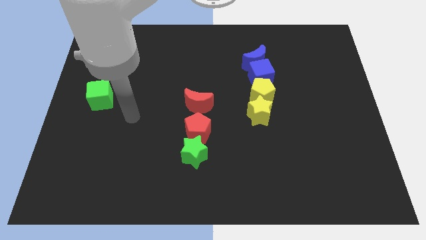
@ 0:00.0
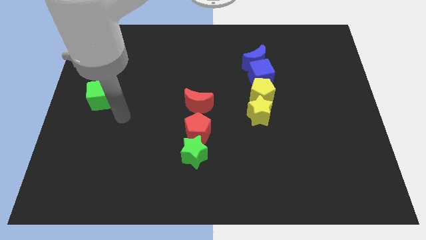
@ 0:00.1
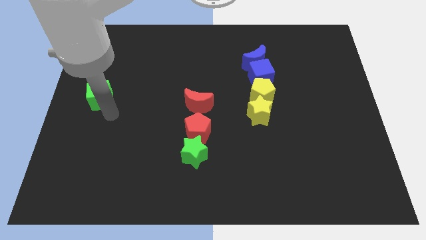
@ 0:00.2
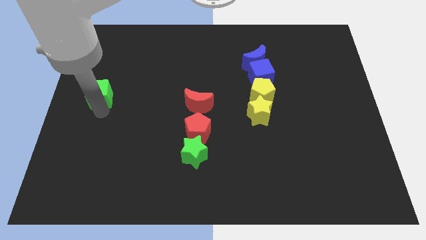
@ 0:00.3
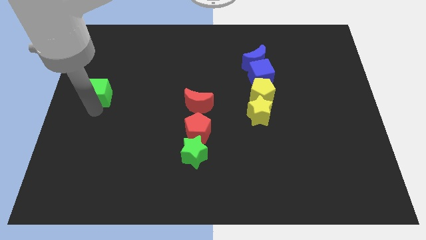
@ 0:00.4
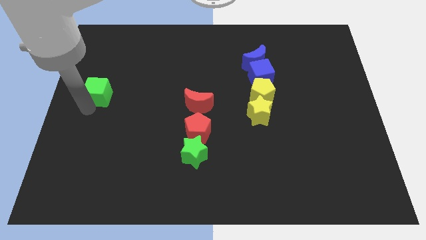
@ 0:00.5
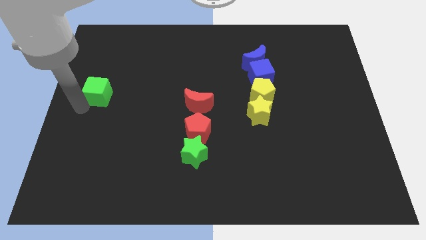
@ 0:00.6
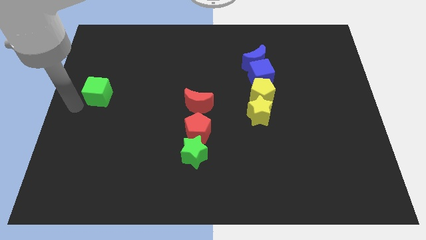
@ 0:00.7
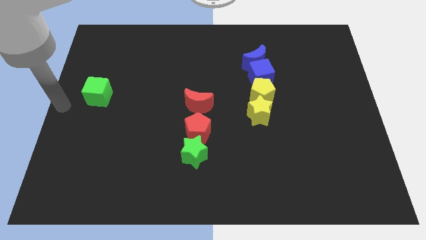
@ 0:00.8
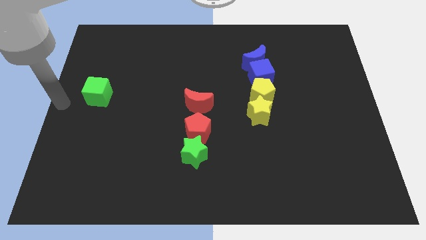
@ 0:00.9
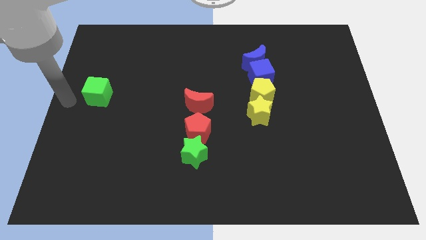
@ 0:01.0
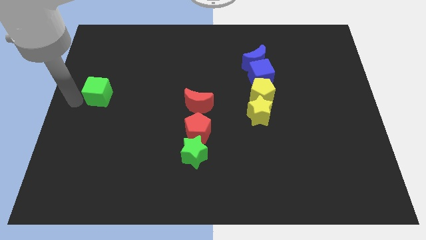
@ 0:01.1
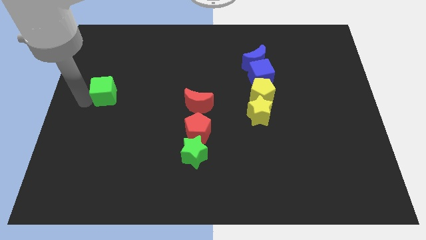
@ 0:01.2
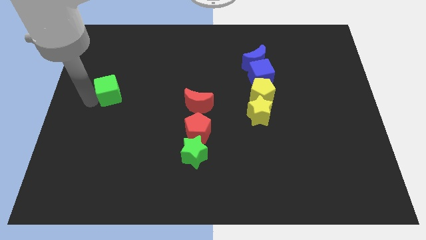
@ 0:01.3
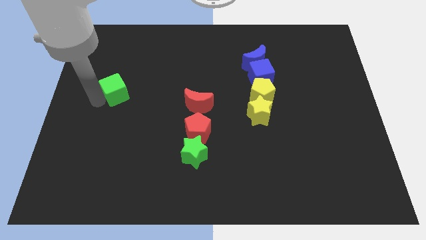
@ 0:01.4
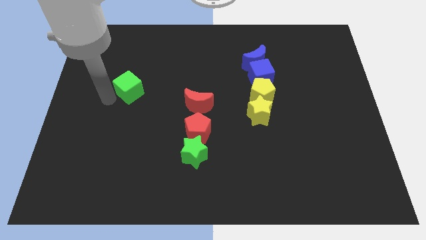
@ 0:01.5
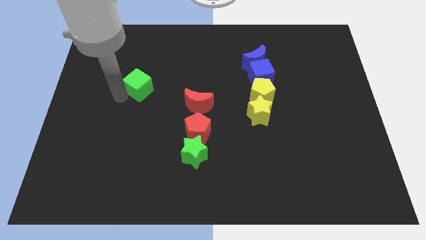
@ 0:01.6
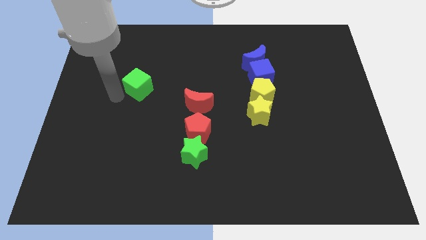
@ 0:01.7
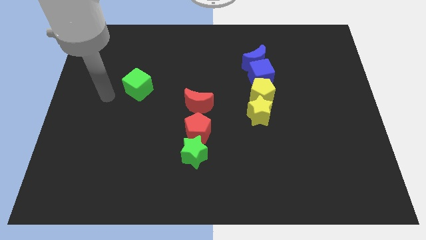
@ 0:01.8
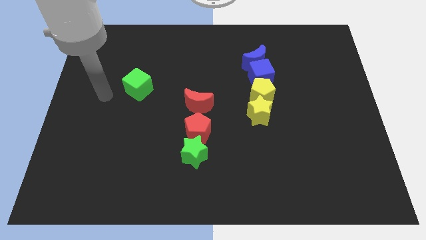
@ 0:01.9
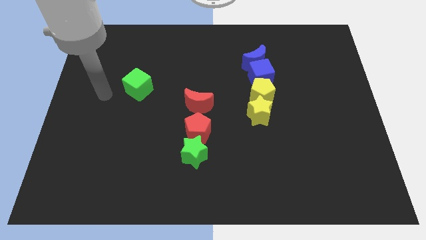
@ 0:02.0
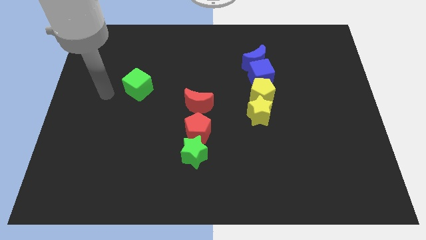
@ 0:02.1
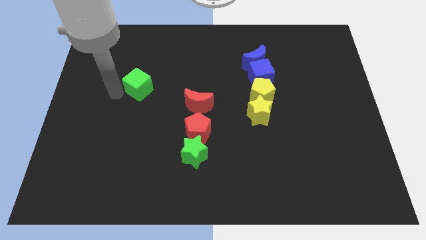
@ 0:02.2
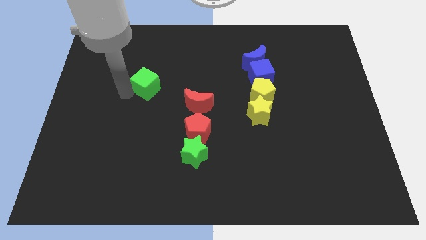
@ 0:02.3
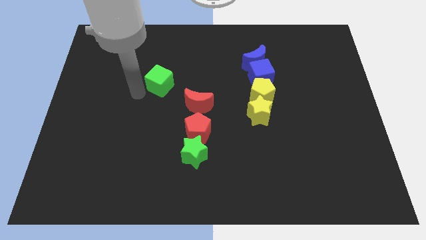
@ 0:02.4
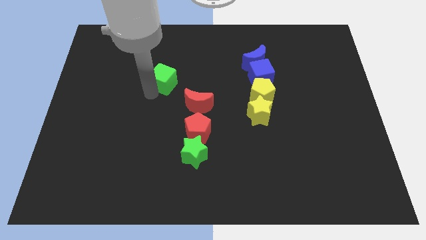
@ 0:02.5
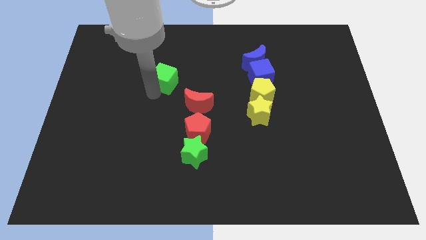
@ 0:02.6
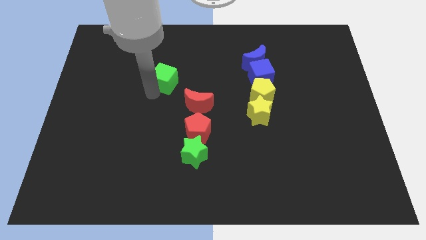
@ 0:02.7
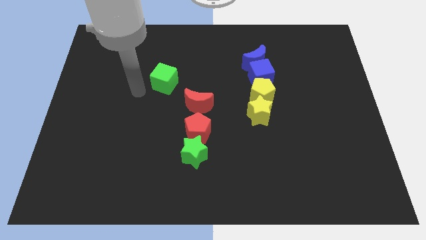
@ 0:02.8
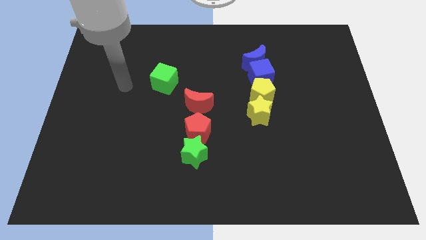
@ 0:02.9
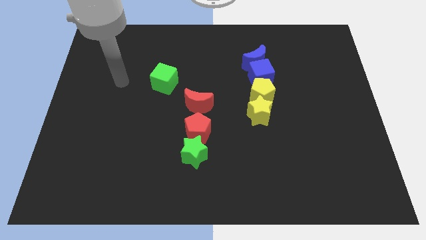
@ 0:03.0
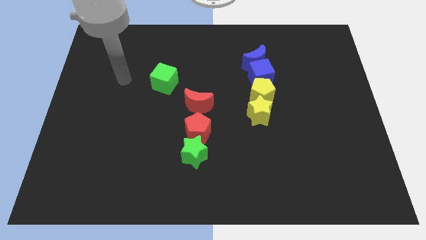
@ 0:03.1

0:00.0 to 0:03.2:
push the green cube towards the red moon

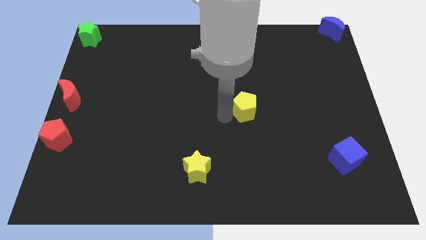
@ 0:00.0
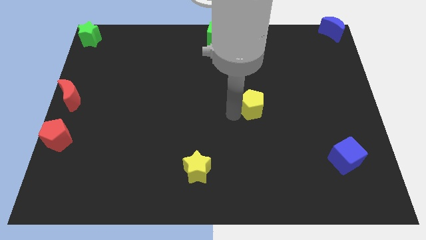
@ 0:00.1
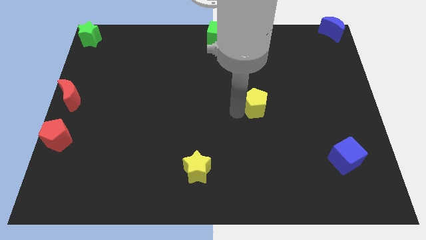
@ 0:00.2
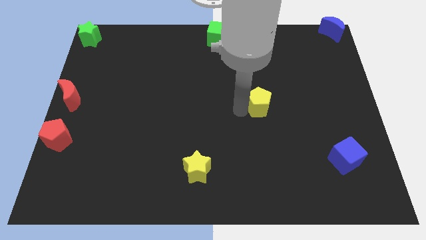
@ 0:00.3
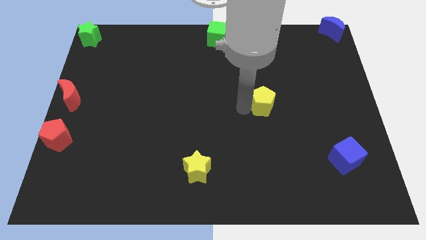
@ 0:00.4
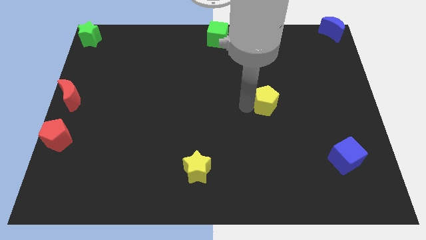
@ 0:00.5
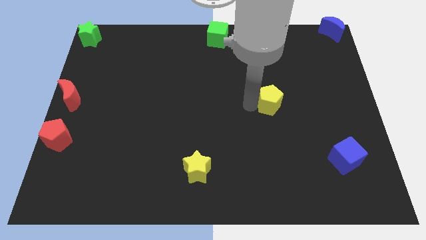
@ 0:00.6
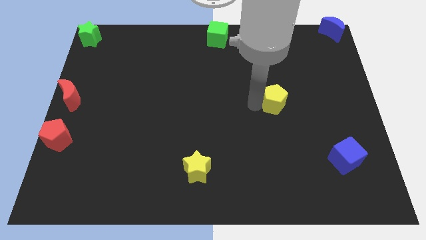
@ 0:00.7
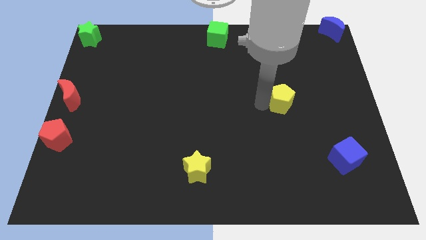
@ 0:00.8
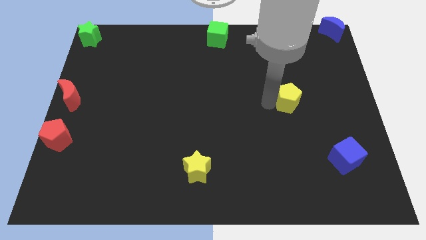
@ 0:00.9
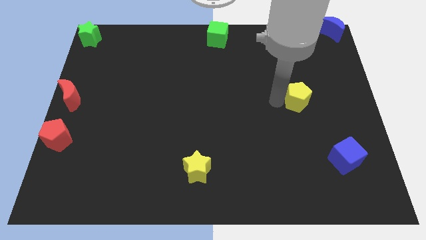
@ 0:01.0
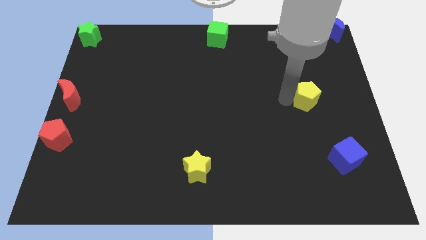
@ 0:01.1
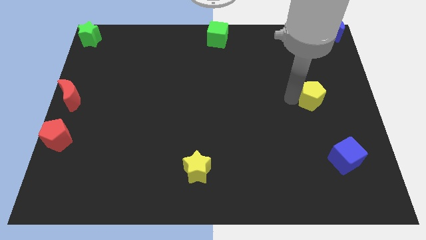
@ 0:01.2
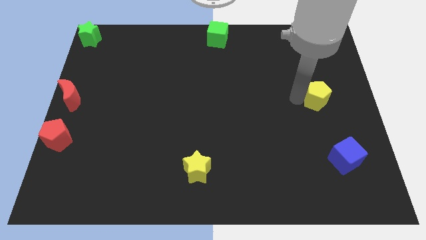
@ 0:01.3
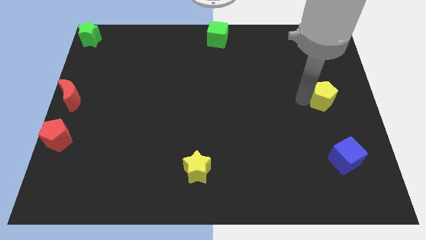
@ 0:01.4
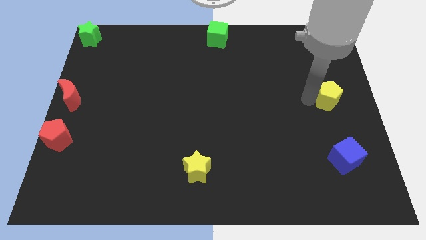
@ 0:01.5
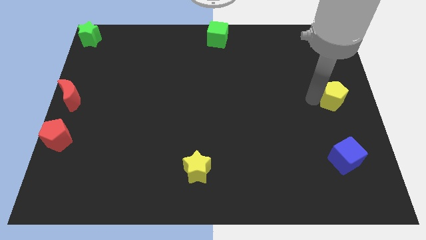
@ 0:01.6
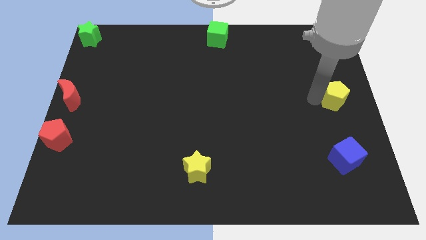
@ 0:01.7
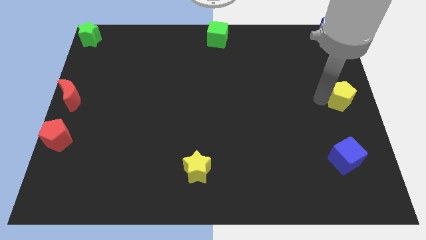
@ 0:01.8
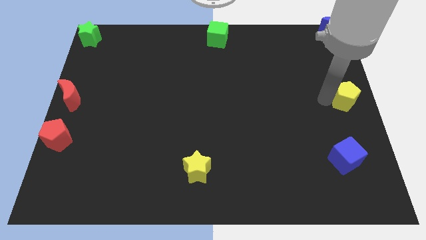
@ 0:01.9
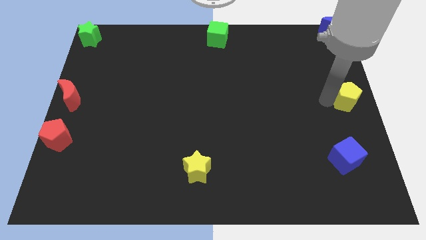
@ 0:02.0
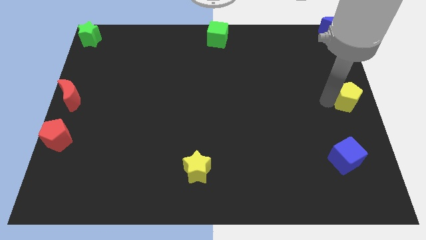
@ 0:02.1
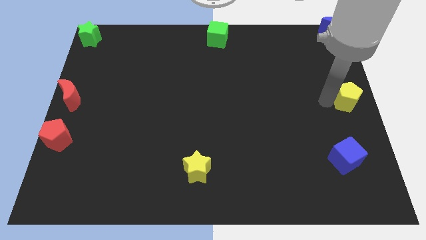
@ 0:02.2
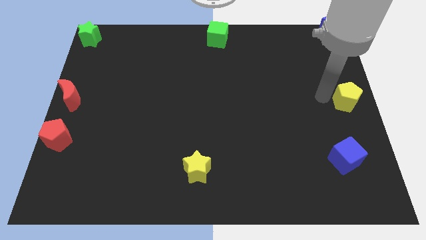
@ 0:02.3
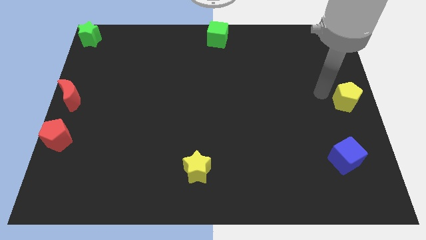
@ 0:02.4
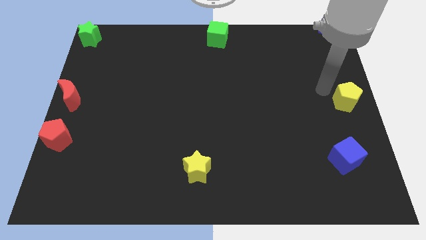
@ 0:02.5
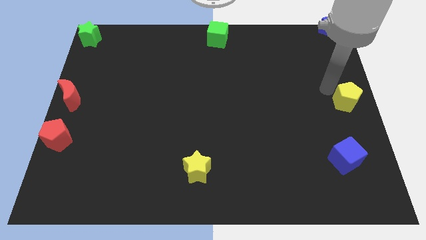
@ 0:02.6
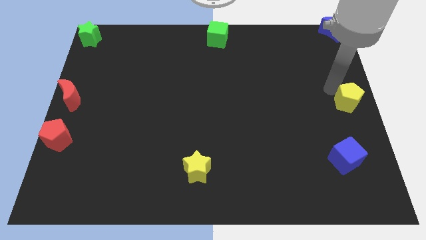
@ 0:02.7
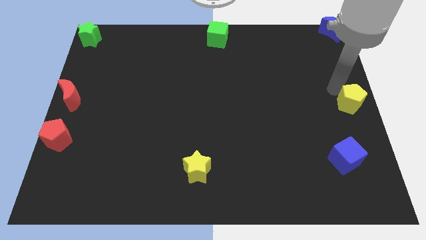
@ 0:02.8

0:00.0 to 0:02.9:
place the yellow pentagon above the blue cube

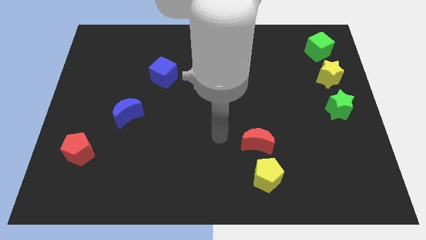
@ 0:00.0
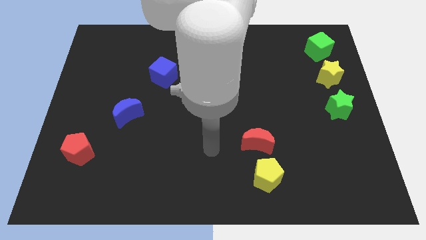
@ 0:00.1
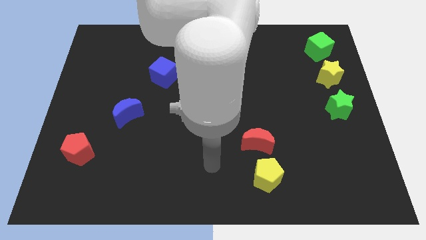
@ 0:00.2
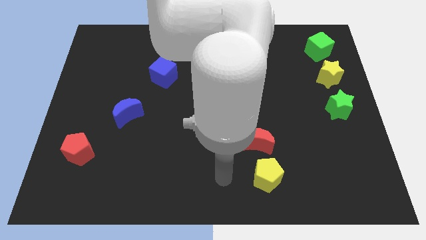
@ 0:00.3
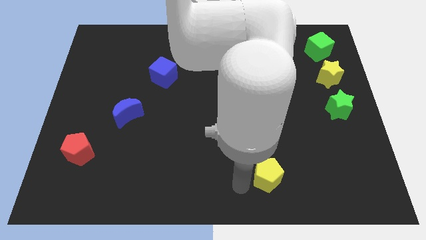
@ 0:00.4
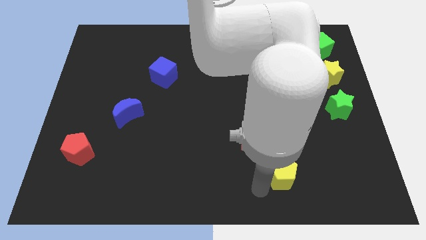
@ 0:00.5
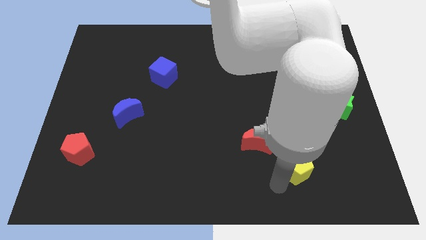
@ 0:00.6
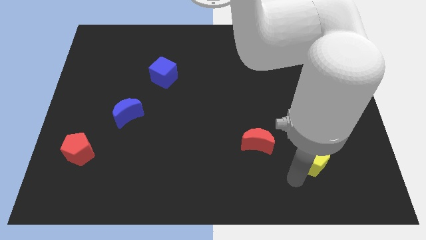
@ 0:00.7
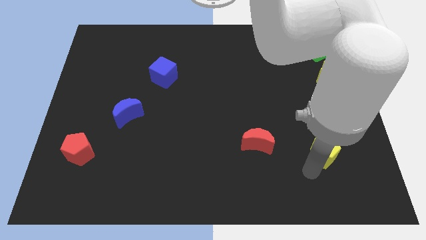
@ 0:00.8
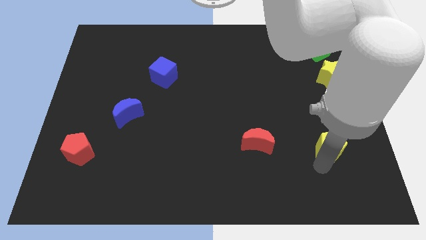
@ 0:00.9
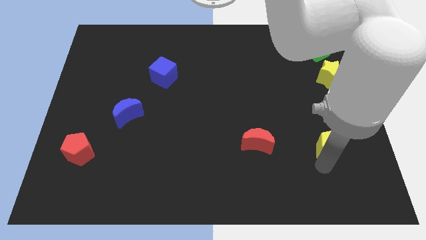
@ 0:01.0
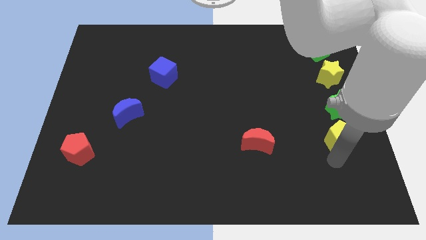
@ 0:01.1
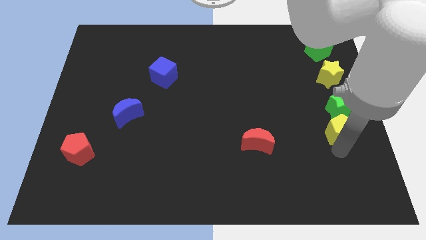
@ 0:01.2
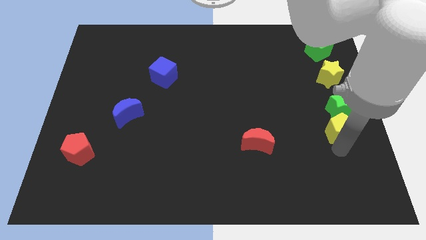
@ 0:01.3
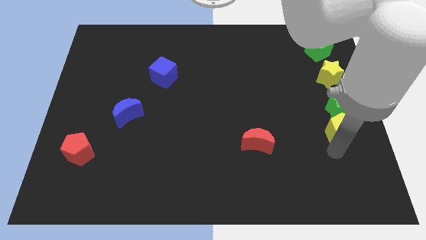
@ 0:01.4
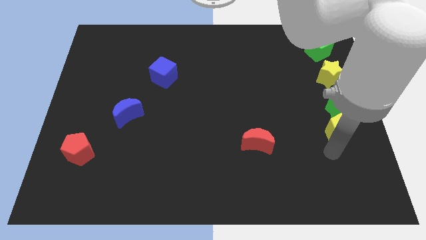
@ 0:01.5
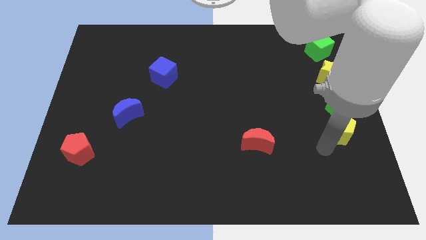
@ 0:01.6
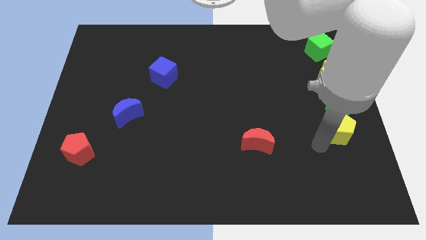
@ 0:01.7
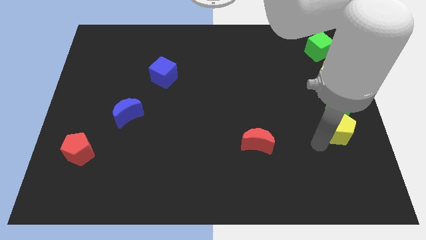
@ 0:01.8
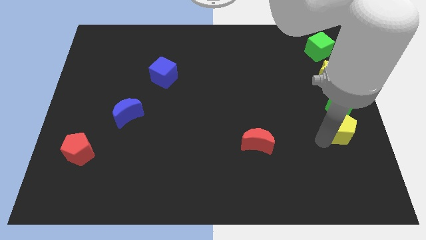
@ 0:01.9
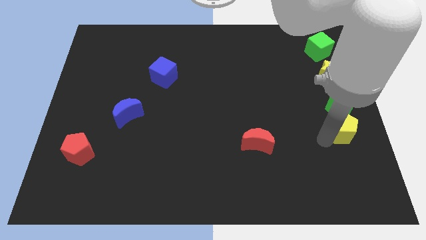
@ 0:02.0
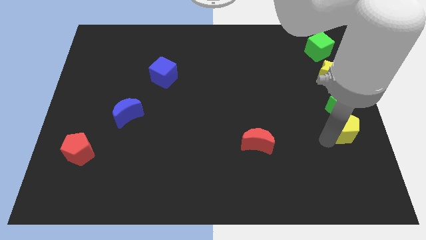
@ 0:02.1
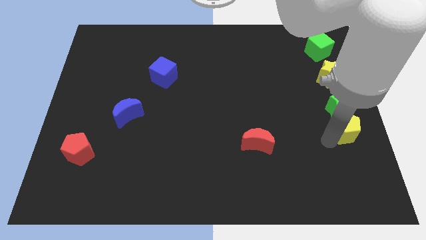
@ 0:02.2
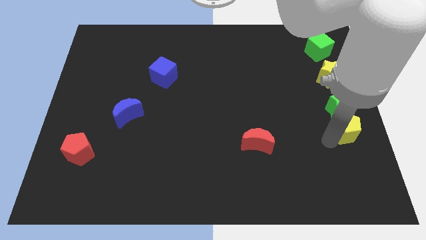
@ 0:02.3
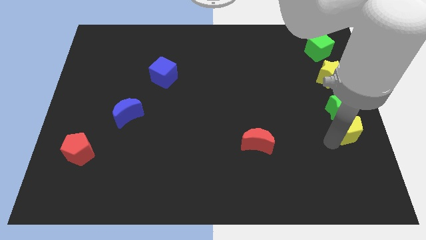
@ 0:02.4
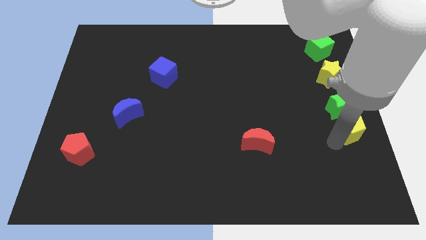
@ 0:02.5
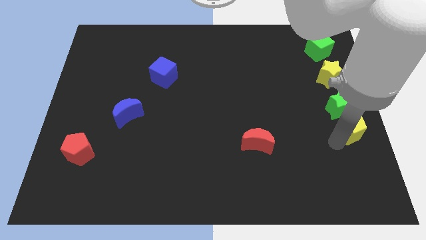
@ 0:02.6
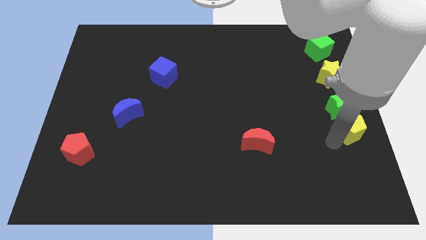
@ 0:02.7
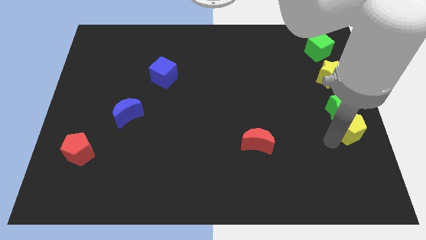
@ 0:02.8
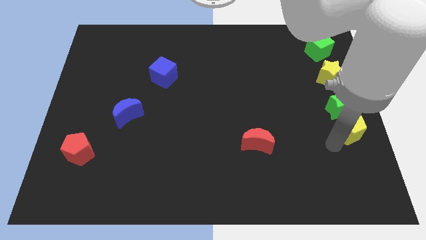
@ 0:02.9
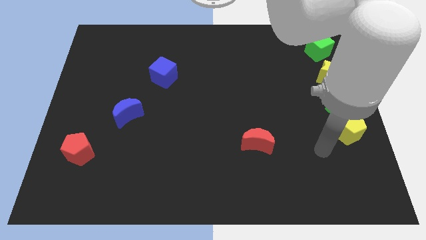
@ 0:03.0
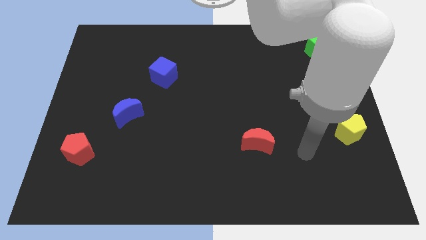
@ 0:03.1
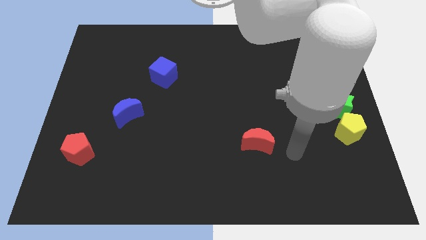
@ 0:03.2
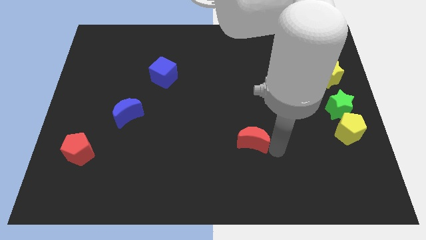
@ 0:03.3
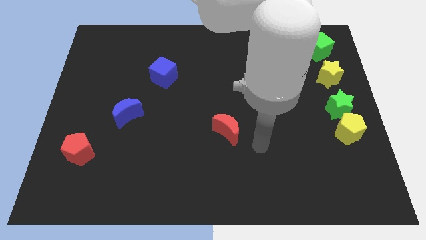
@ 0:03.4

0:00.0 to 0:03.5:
place the yellow pentagon to the bottom of the green star
